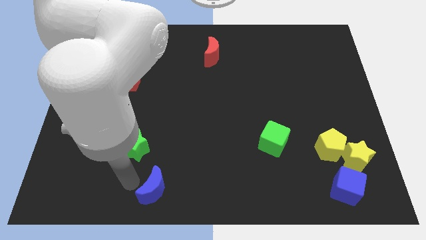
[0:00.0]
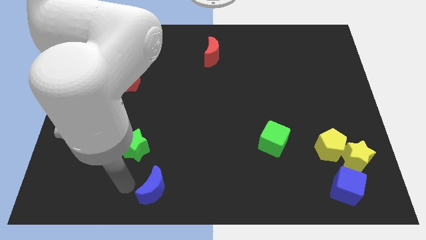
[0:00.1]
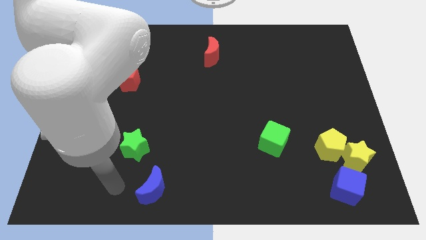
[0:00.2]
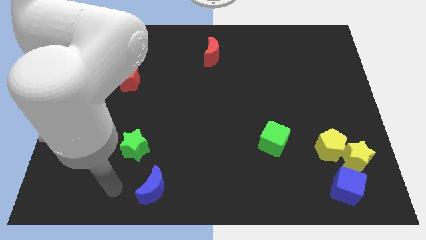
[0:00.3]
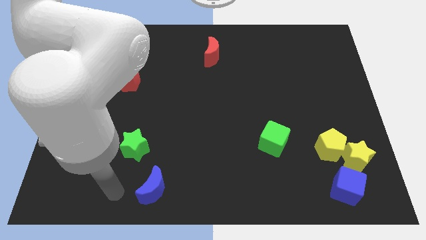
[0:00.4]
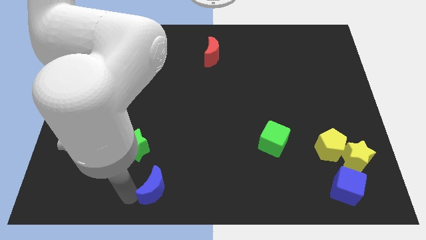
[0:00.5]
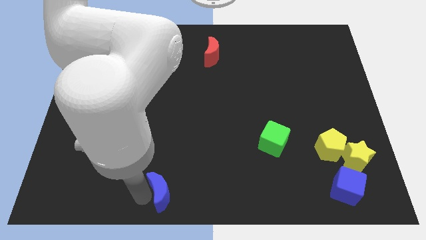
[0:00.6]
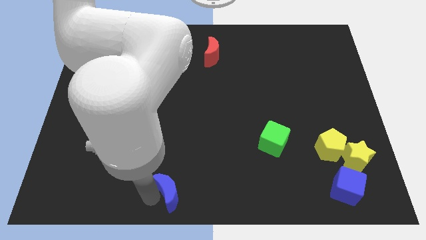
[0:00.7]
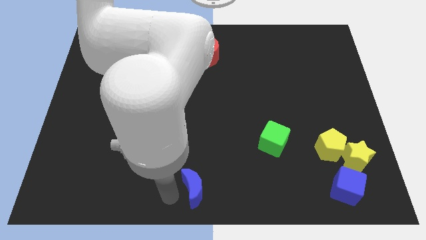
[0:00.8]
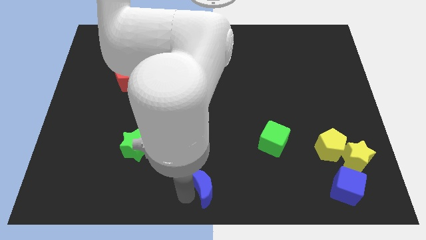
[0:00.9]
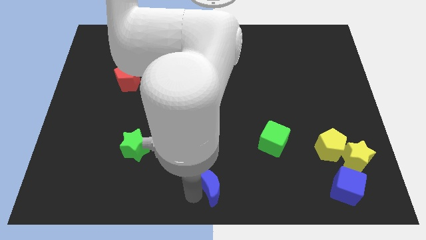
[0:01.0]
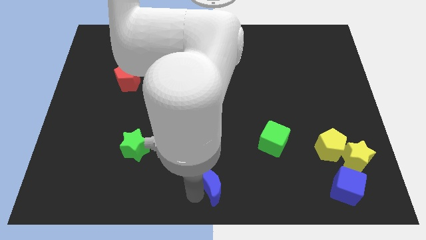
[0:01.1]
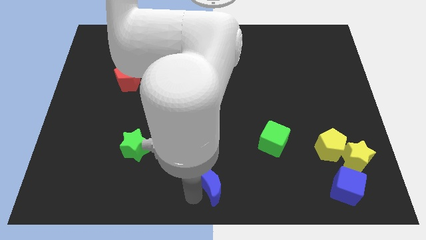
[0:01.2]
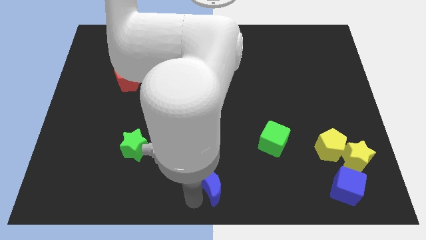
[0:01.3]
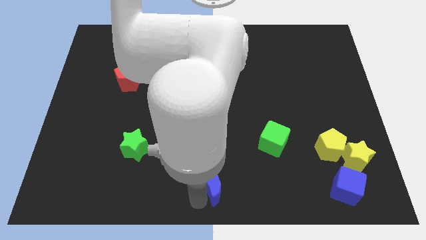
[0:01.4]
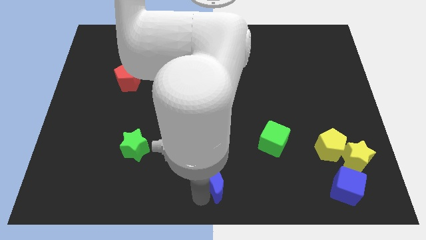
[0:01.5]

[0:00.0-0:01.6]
move the blue crescent slightly to the right

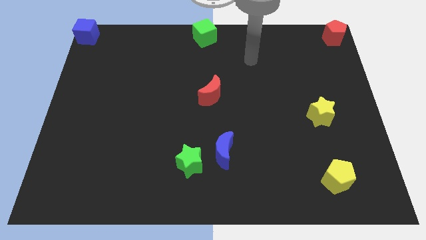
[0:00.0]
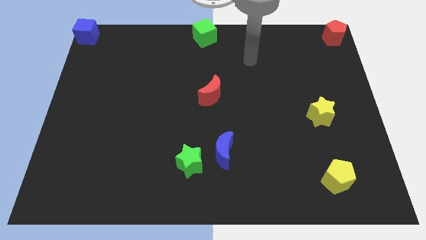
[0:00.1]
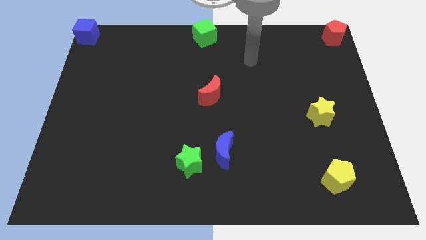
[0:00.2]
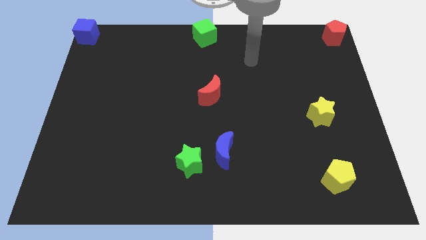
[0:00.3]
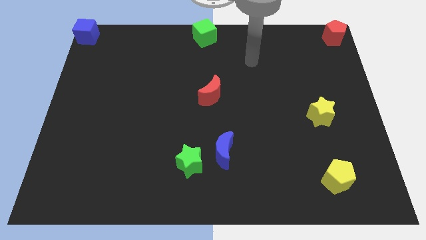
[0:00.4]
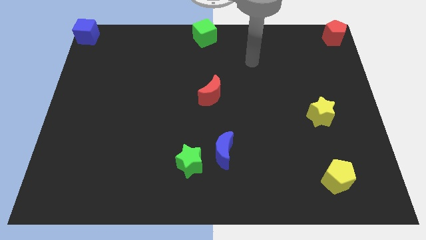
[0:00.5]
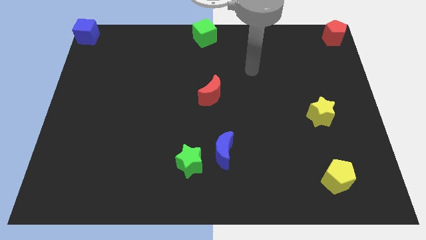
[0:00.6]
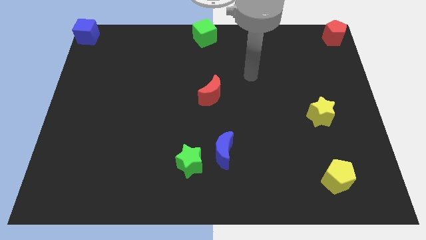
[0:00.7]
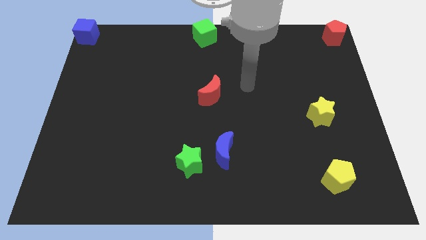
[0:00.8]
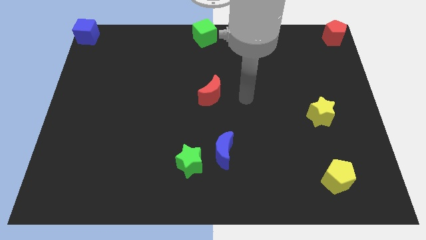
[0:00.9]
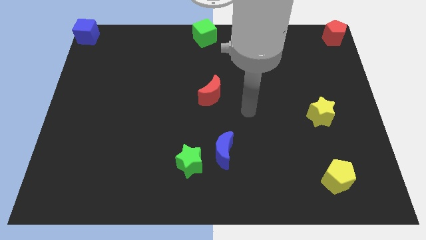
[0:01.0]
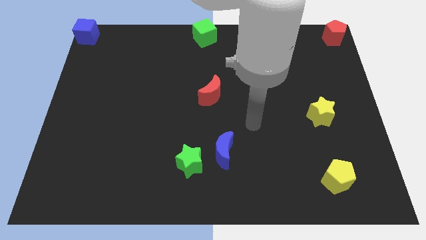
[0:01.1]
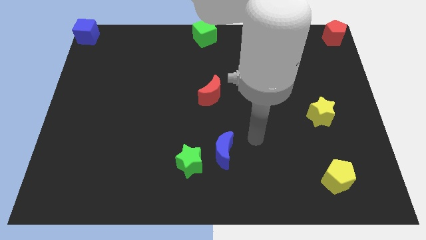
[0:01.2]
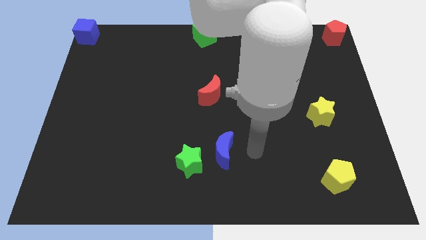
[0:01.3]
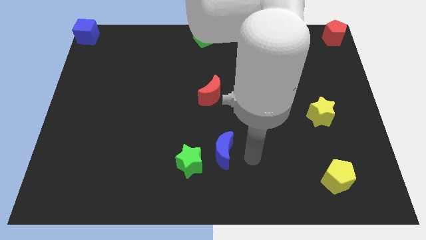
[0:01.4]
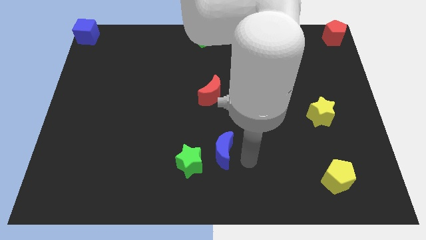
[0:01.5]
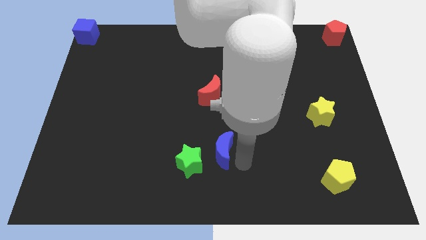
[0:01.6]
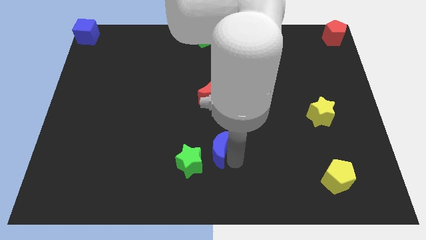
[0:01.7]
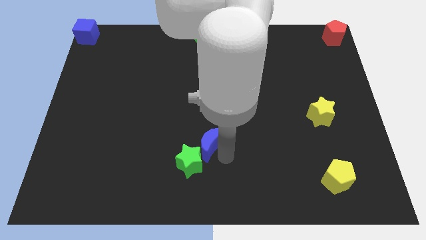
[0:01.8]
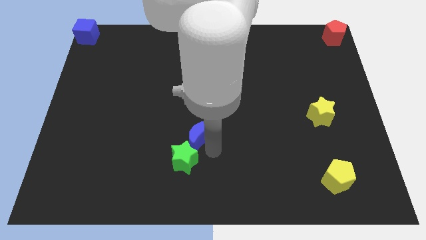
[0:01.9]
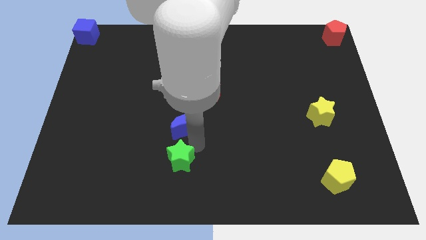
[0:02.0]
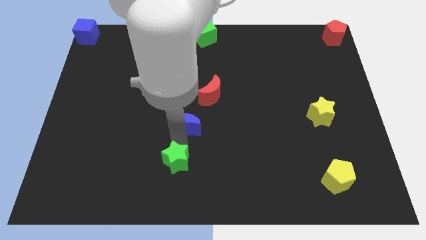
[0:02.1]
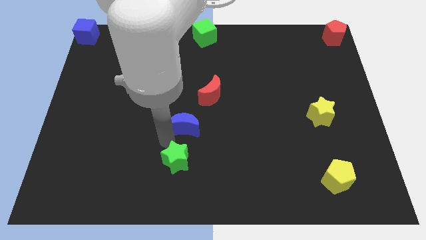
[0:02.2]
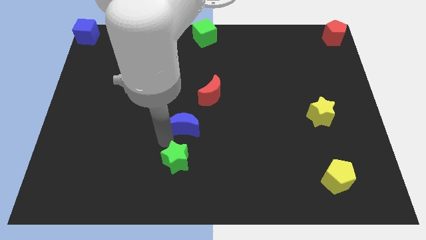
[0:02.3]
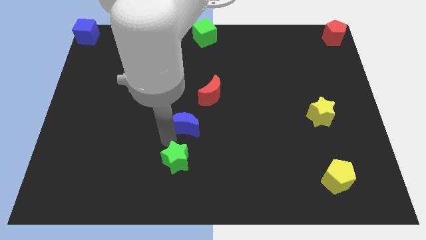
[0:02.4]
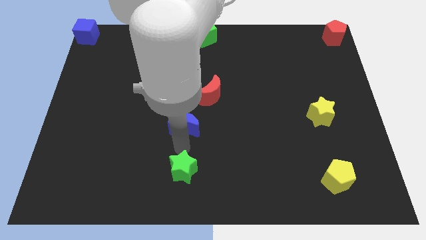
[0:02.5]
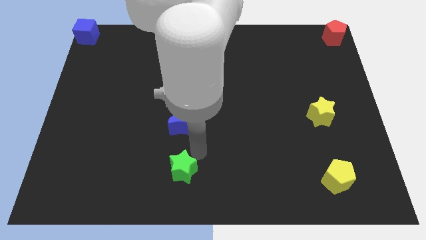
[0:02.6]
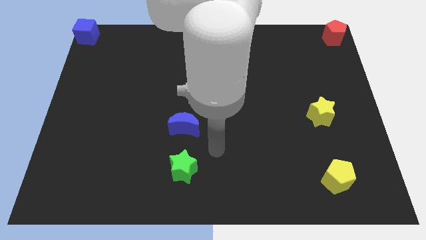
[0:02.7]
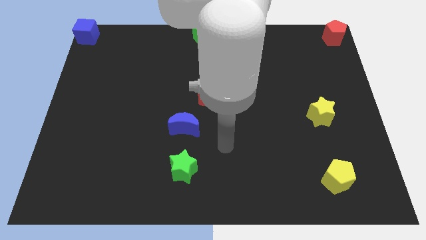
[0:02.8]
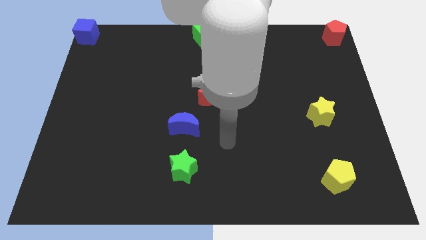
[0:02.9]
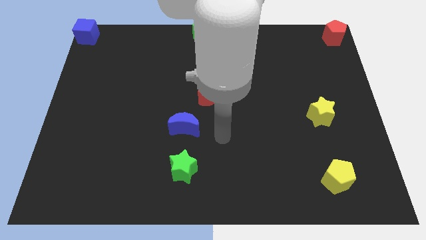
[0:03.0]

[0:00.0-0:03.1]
separate blue moon and green star

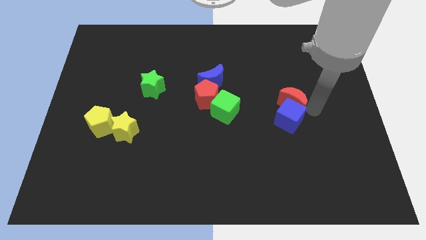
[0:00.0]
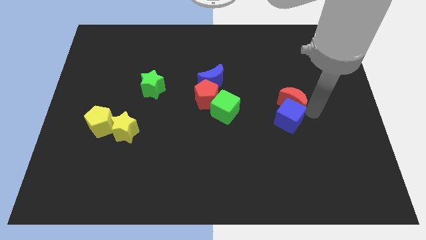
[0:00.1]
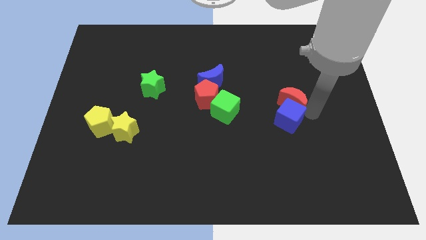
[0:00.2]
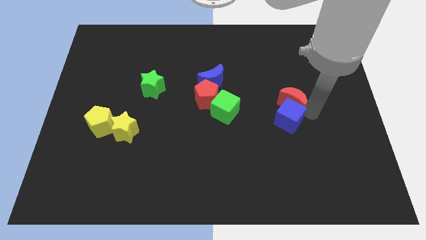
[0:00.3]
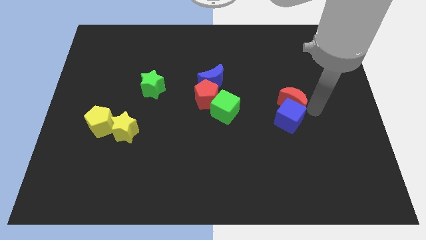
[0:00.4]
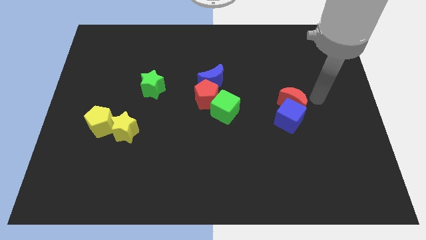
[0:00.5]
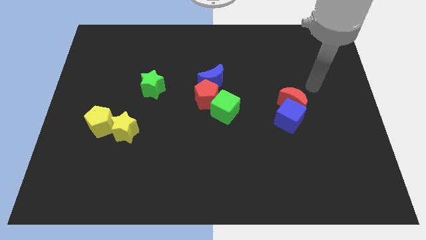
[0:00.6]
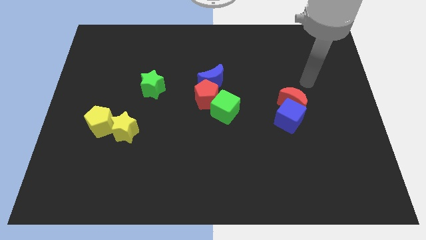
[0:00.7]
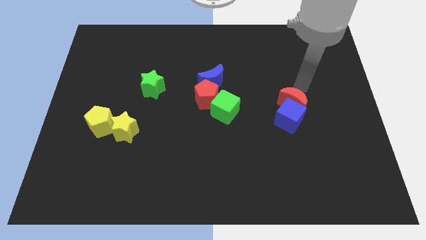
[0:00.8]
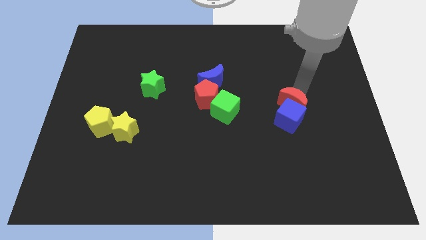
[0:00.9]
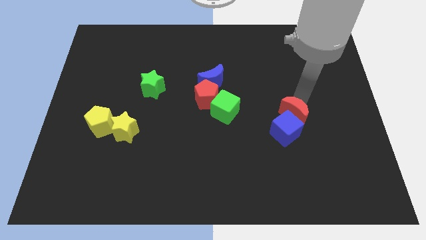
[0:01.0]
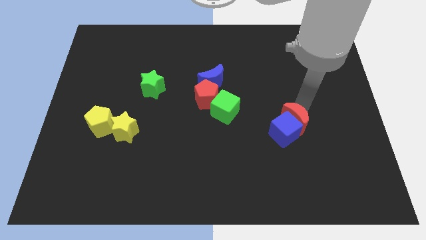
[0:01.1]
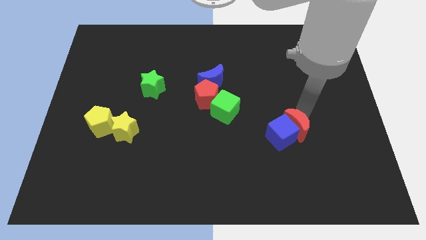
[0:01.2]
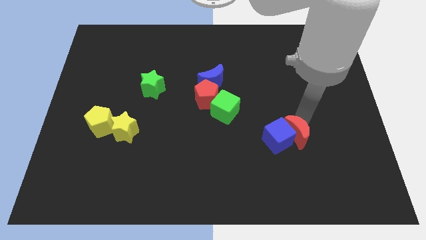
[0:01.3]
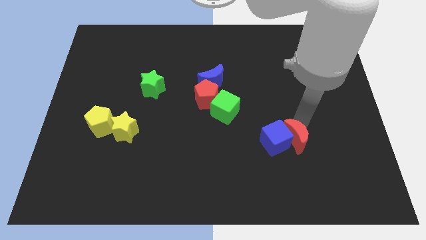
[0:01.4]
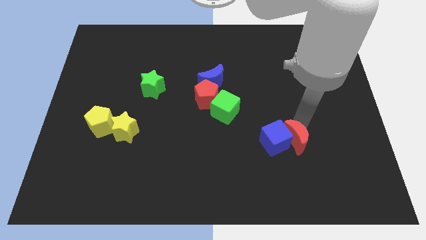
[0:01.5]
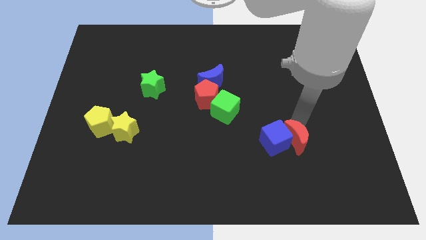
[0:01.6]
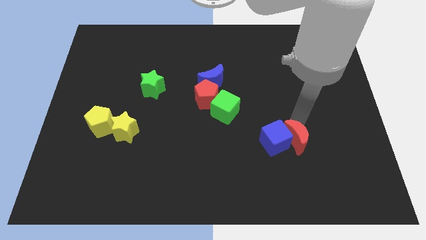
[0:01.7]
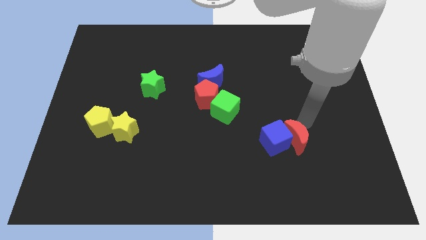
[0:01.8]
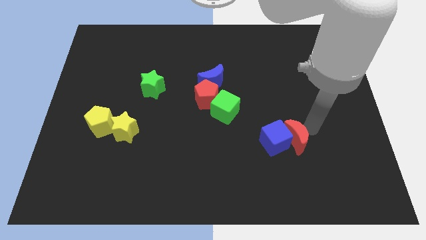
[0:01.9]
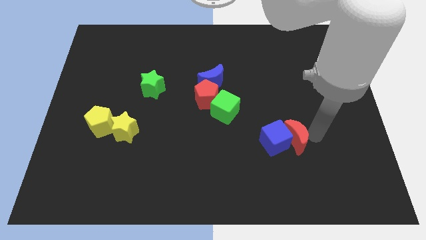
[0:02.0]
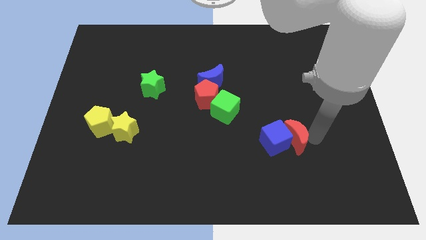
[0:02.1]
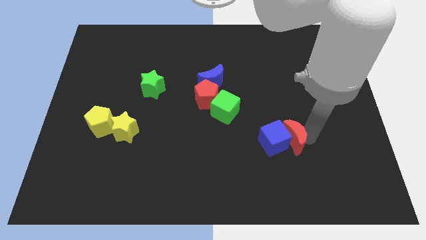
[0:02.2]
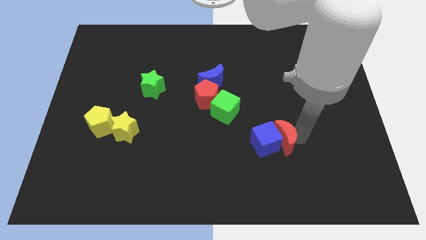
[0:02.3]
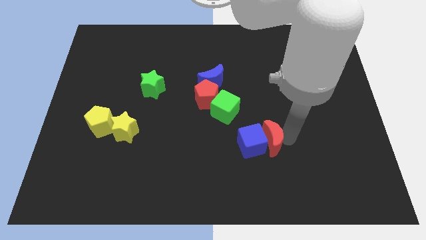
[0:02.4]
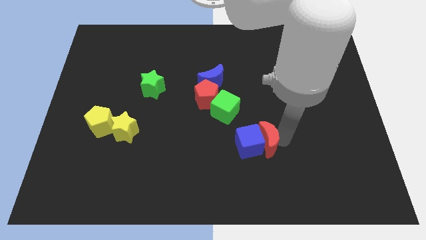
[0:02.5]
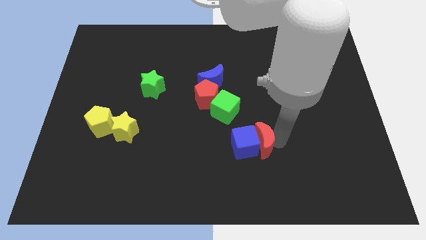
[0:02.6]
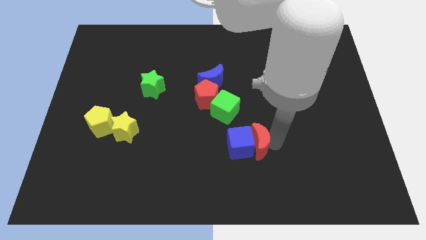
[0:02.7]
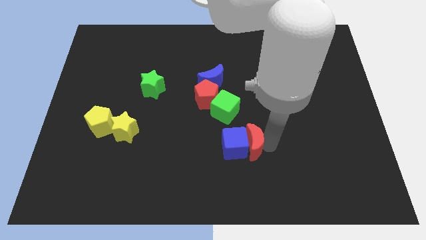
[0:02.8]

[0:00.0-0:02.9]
move the red moon and the blue cube slightly towards the left of the board

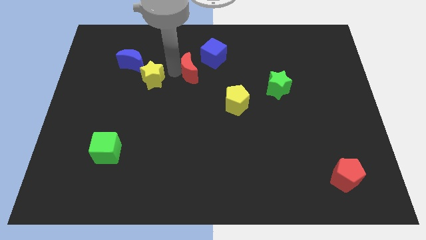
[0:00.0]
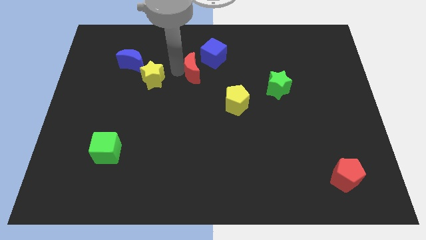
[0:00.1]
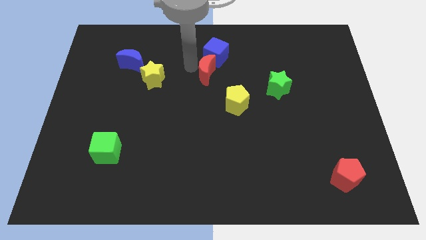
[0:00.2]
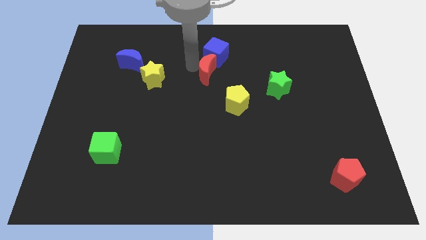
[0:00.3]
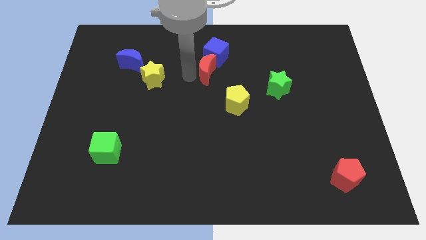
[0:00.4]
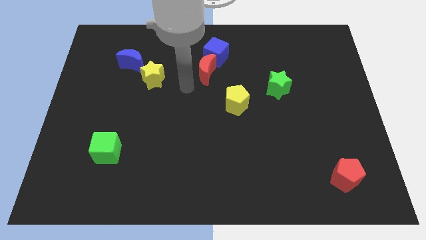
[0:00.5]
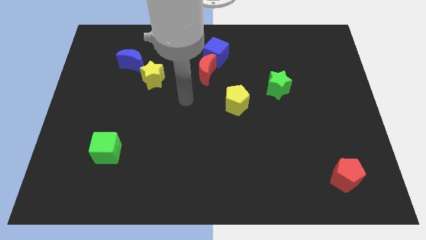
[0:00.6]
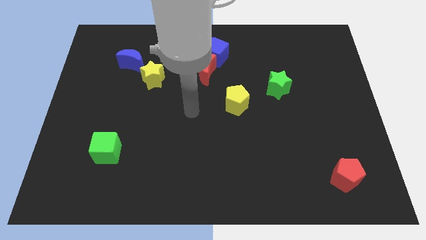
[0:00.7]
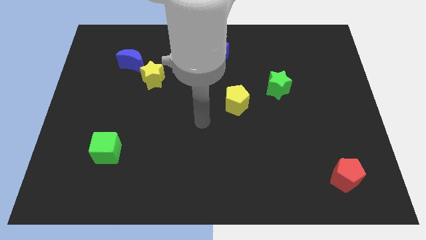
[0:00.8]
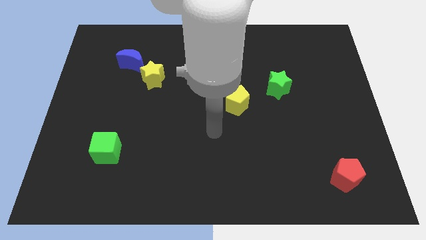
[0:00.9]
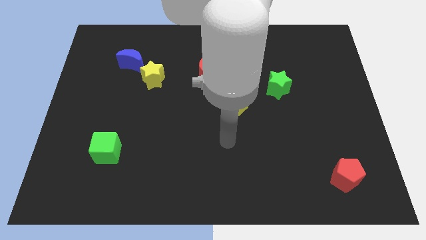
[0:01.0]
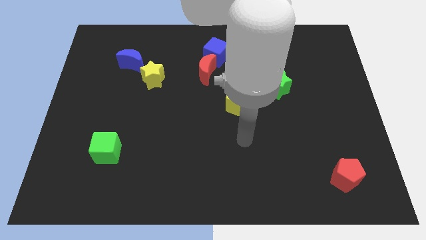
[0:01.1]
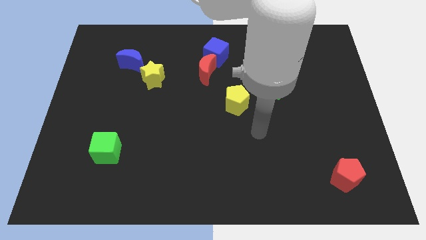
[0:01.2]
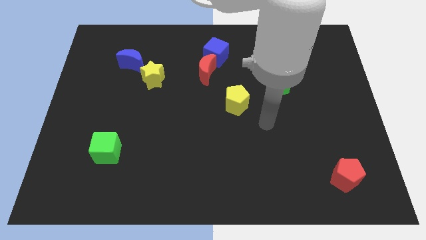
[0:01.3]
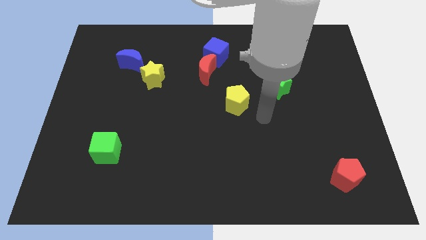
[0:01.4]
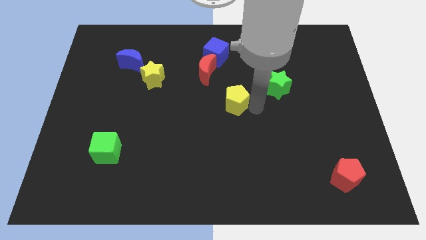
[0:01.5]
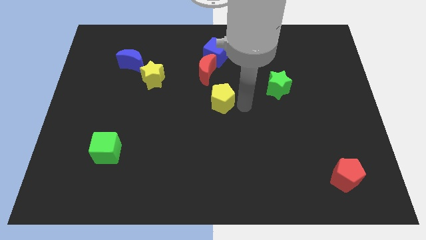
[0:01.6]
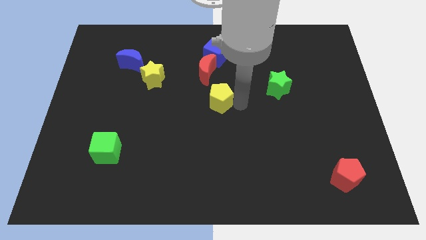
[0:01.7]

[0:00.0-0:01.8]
push the red crescent into the blue cube
